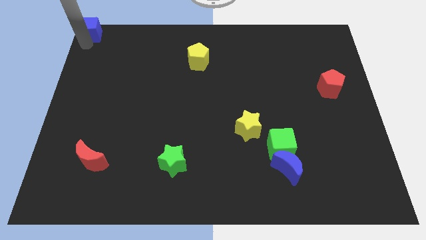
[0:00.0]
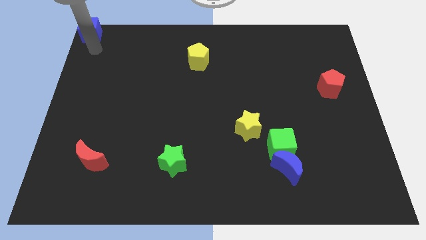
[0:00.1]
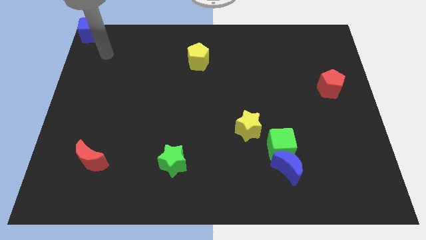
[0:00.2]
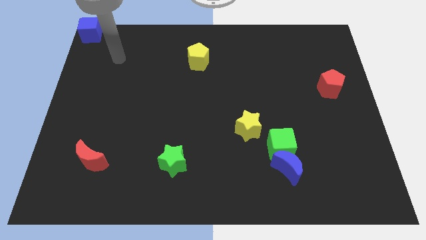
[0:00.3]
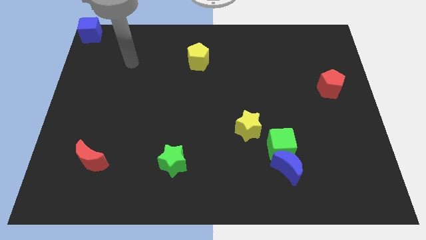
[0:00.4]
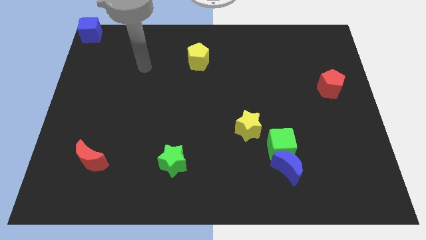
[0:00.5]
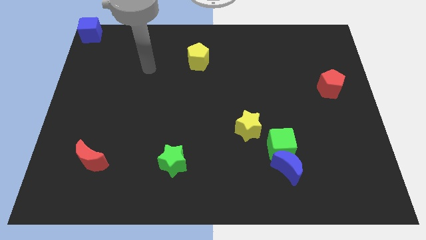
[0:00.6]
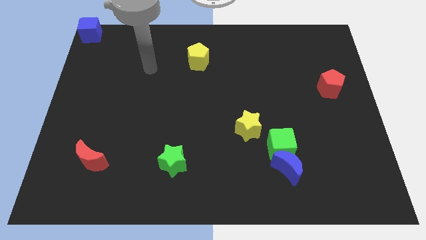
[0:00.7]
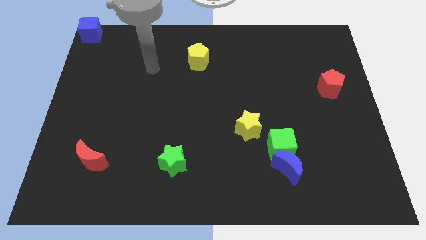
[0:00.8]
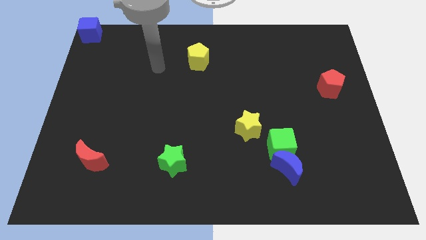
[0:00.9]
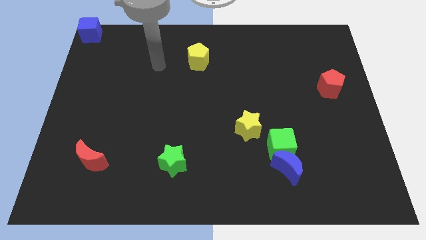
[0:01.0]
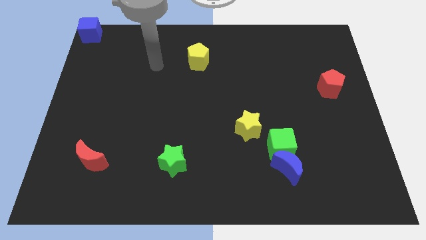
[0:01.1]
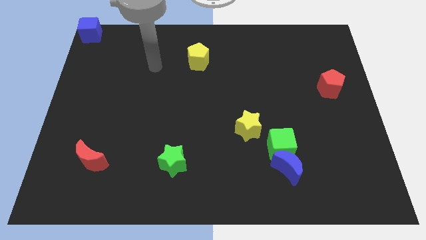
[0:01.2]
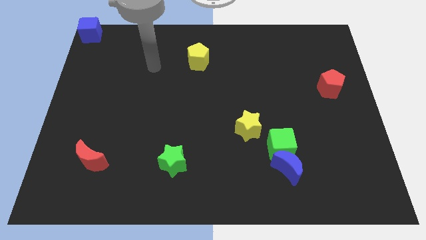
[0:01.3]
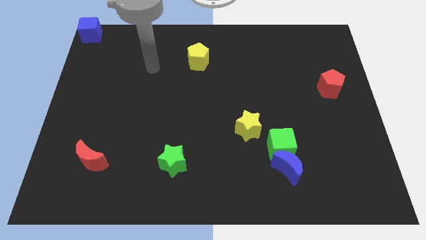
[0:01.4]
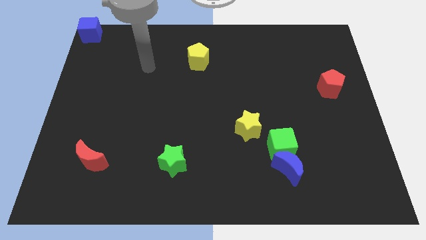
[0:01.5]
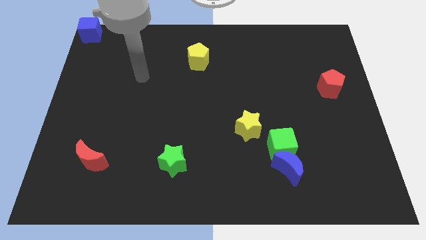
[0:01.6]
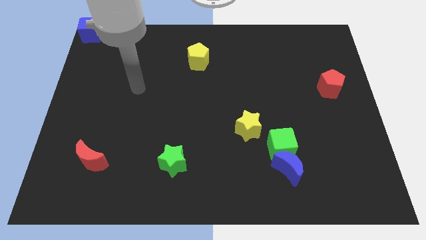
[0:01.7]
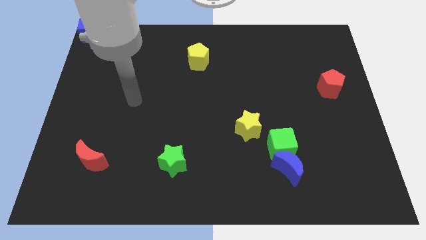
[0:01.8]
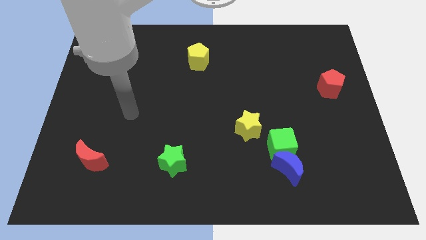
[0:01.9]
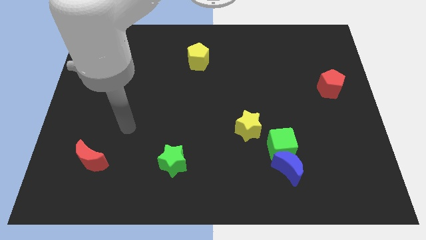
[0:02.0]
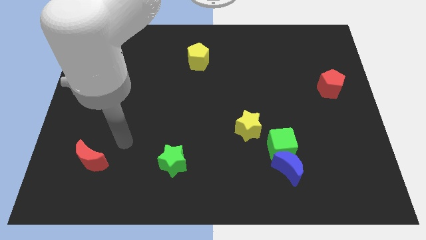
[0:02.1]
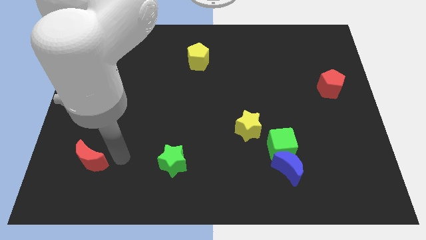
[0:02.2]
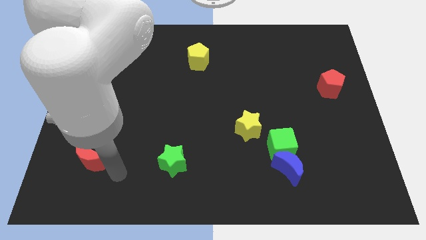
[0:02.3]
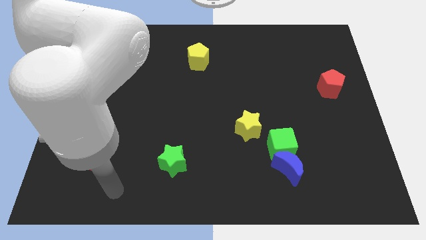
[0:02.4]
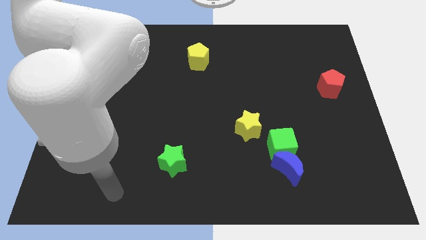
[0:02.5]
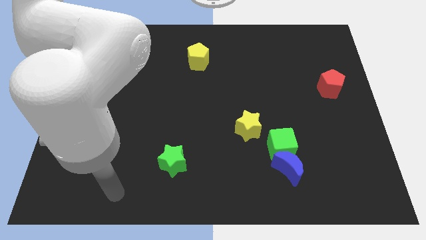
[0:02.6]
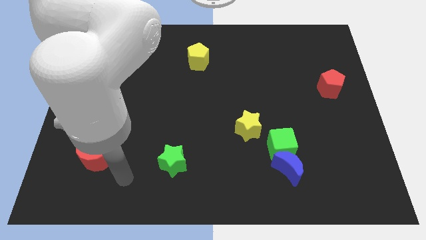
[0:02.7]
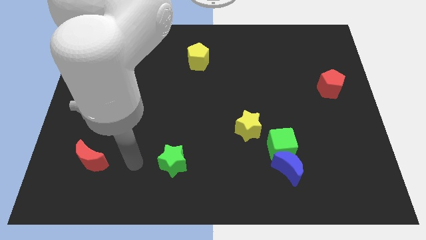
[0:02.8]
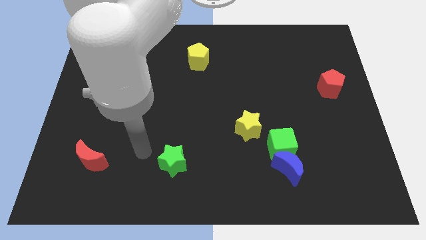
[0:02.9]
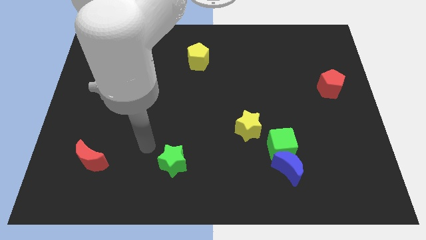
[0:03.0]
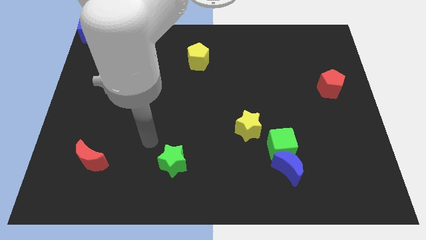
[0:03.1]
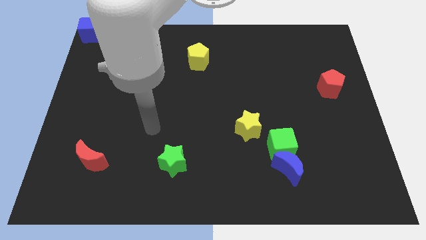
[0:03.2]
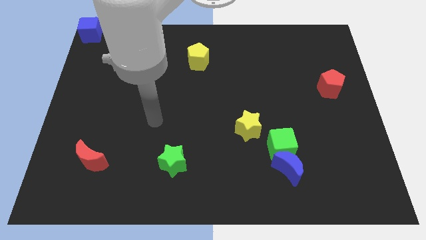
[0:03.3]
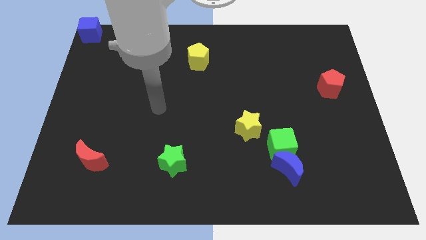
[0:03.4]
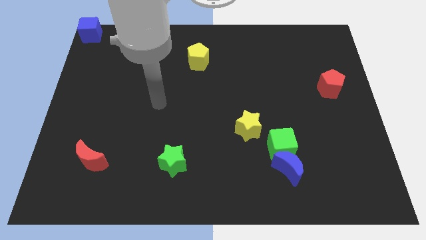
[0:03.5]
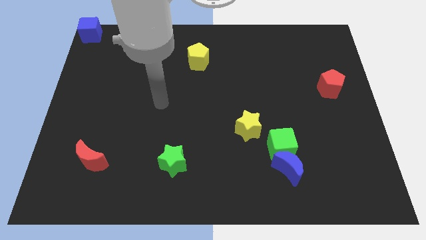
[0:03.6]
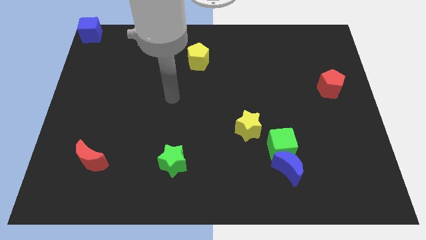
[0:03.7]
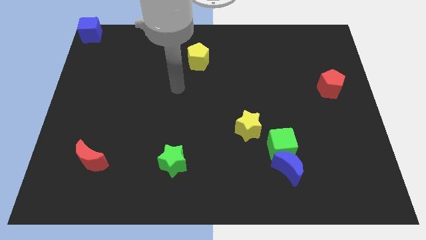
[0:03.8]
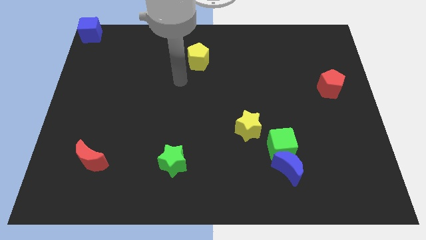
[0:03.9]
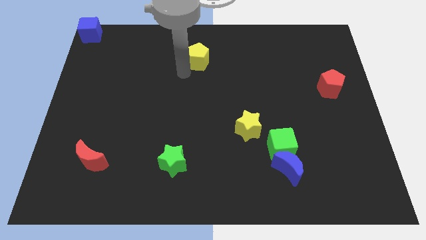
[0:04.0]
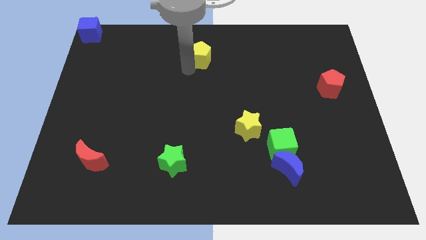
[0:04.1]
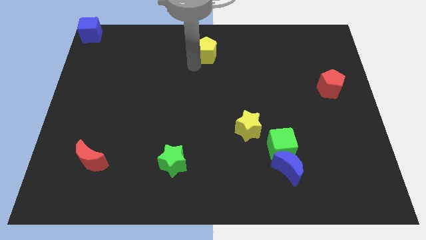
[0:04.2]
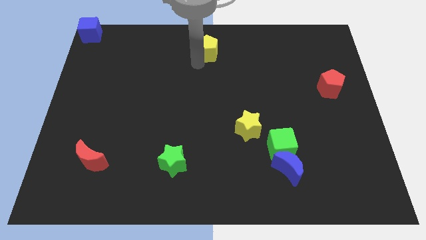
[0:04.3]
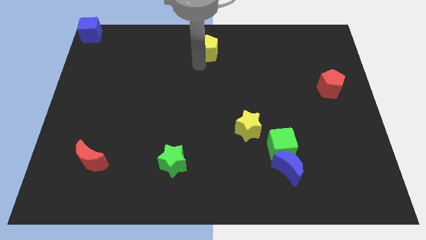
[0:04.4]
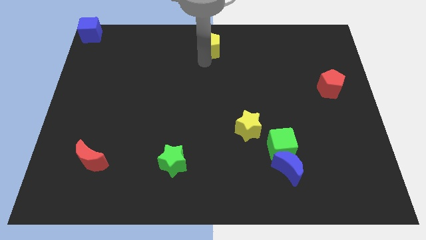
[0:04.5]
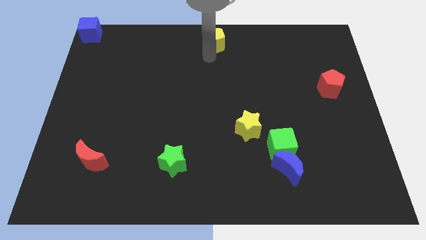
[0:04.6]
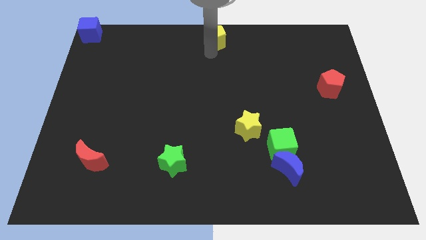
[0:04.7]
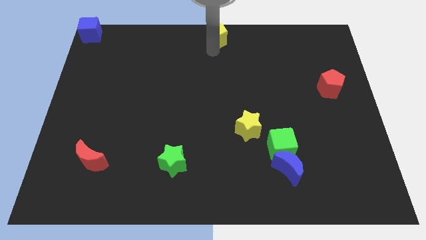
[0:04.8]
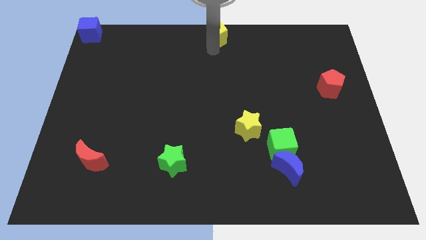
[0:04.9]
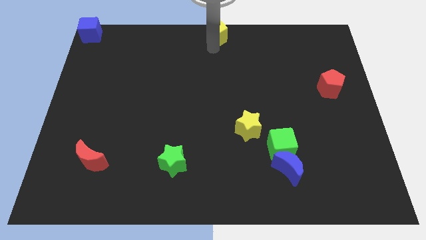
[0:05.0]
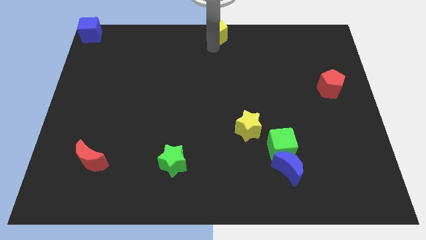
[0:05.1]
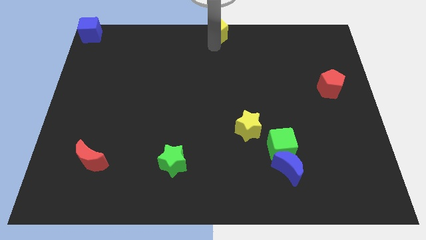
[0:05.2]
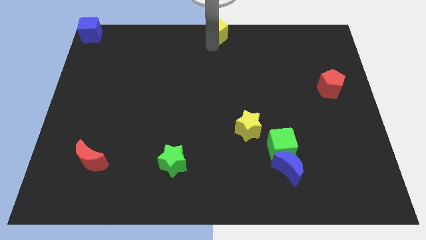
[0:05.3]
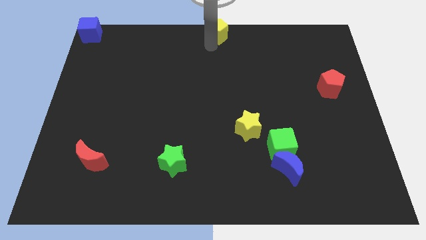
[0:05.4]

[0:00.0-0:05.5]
move your arm away from the blue cube

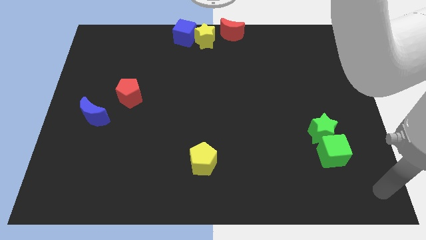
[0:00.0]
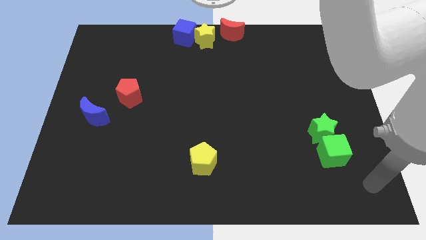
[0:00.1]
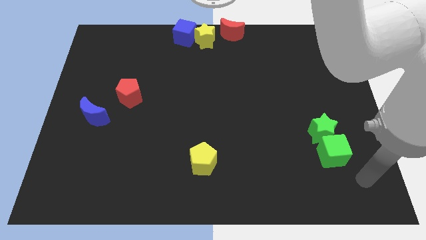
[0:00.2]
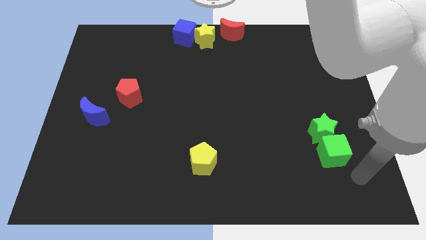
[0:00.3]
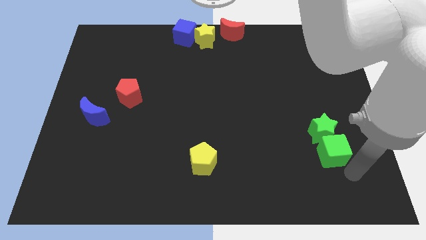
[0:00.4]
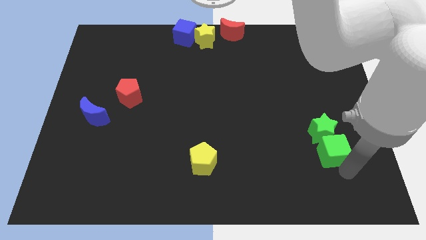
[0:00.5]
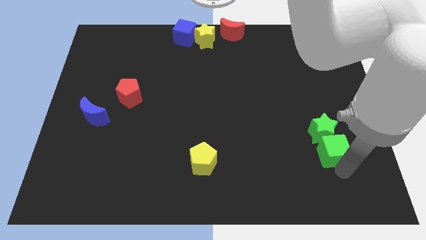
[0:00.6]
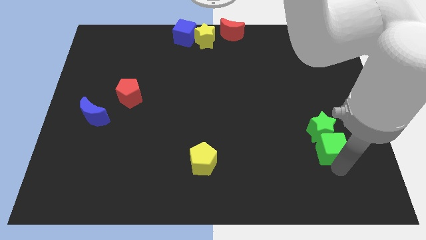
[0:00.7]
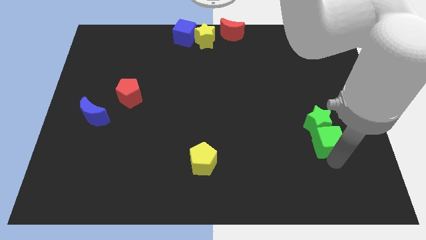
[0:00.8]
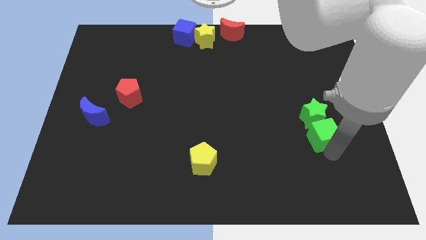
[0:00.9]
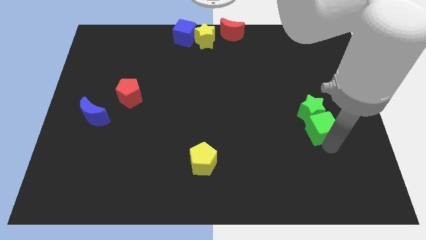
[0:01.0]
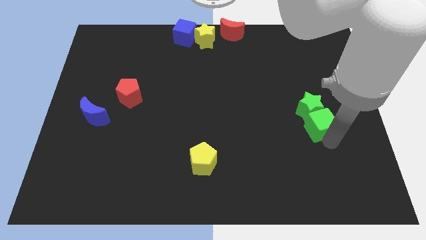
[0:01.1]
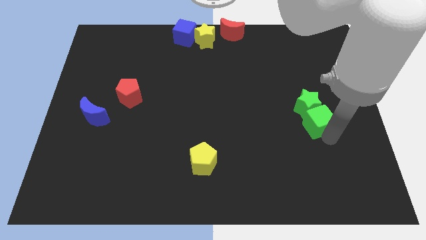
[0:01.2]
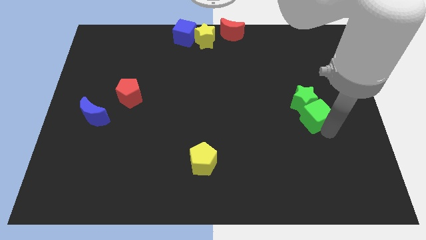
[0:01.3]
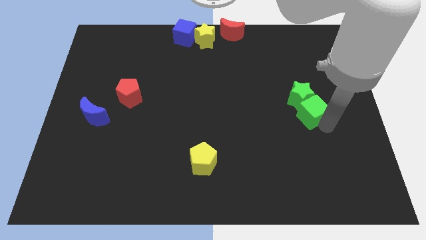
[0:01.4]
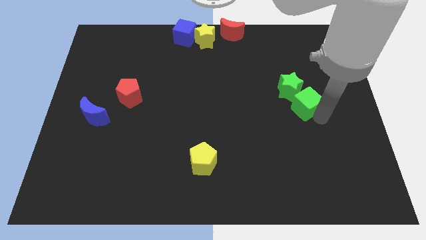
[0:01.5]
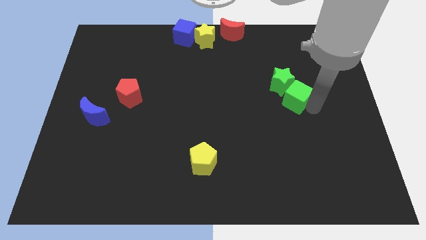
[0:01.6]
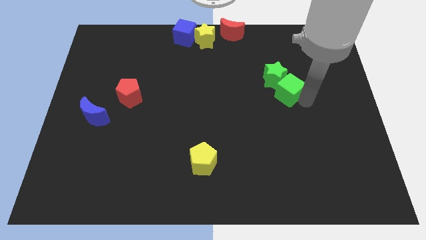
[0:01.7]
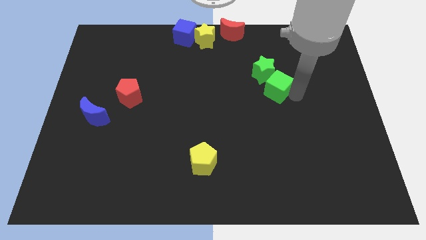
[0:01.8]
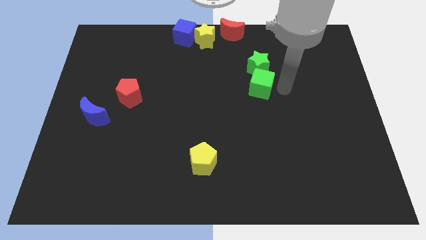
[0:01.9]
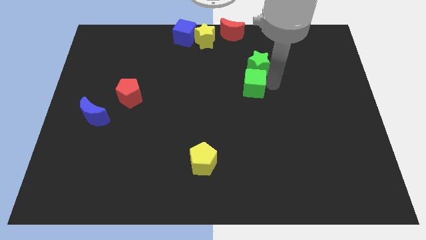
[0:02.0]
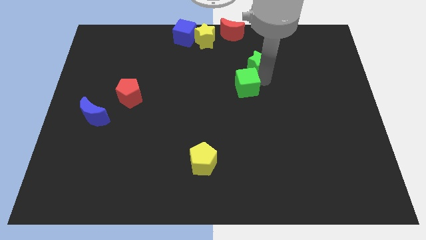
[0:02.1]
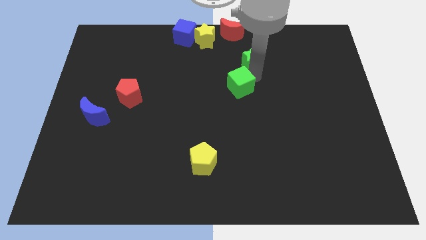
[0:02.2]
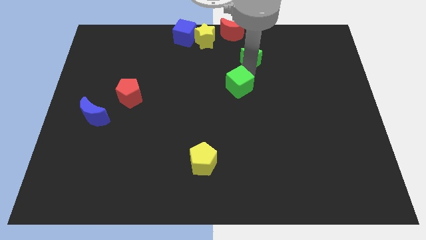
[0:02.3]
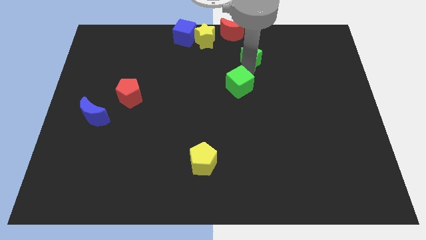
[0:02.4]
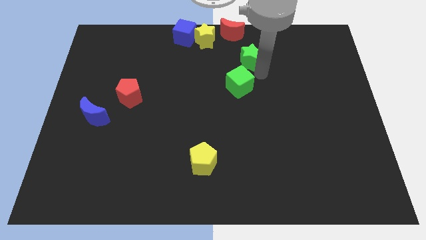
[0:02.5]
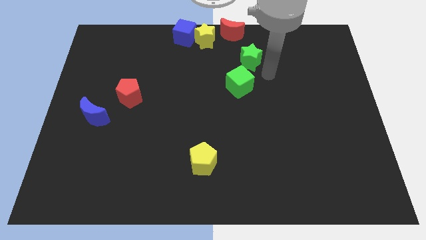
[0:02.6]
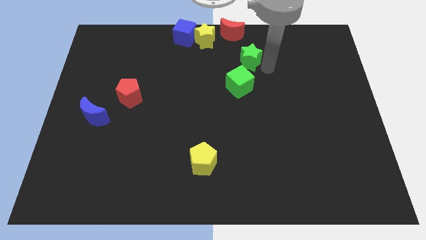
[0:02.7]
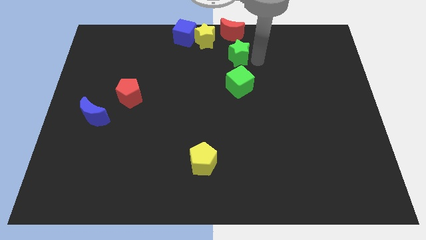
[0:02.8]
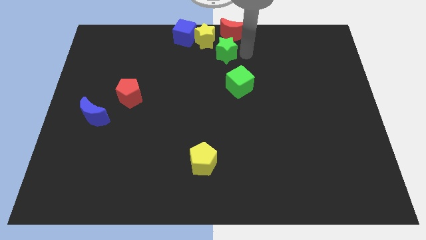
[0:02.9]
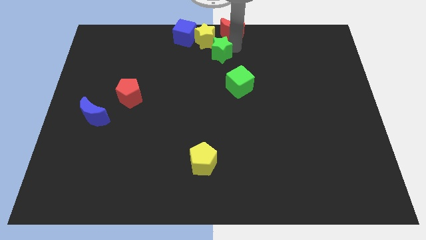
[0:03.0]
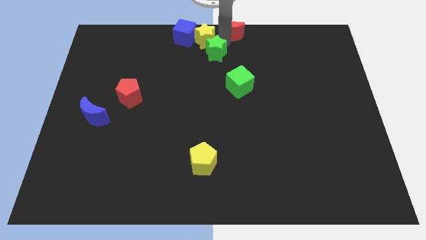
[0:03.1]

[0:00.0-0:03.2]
place the green star diagonally in between the yellow star and green cube

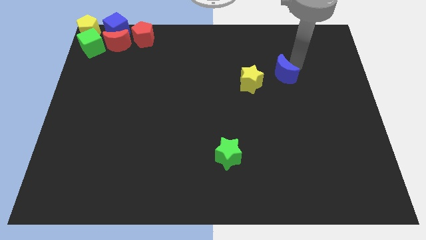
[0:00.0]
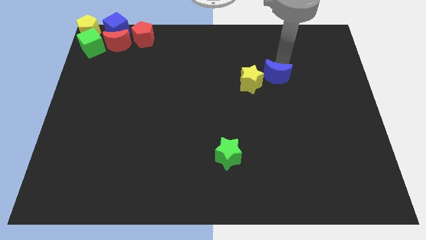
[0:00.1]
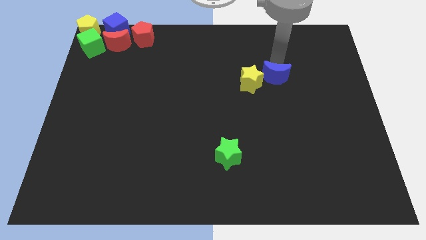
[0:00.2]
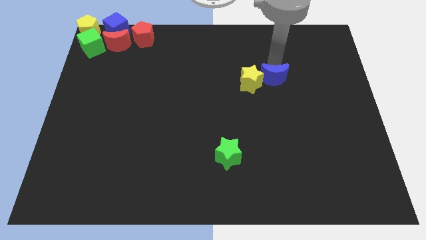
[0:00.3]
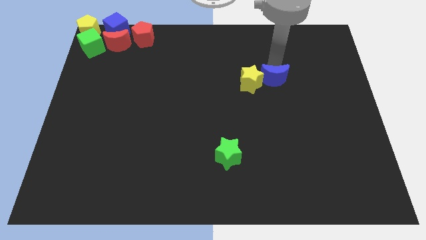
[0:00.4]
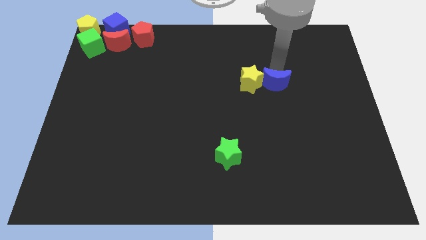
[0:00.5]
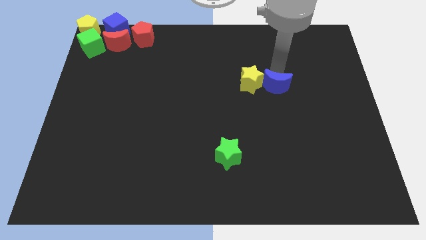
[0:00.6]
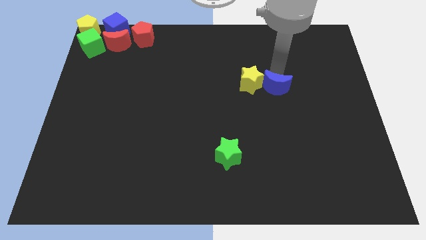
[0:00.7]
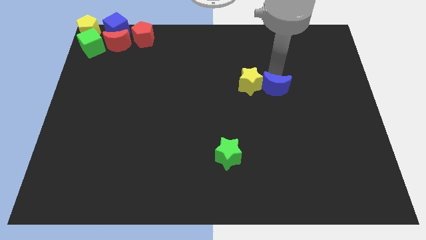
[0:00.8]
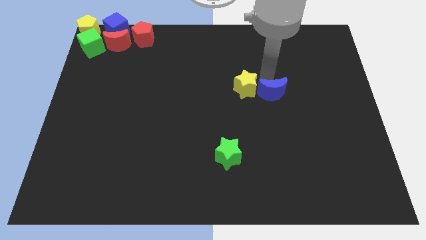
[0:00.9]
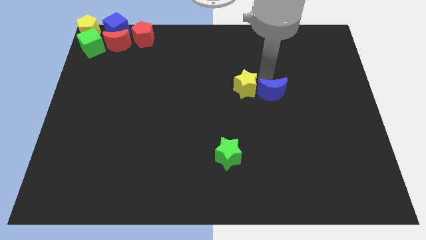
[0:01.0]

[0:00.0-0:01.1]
slightly move blue moon and yellow star
